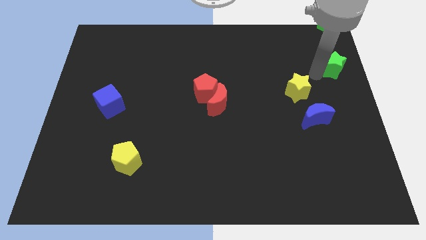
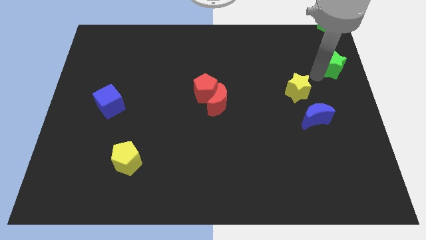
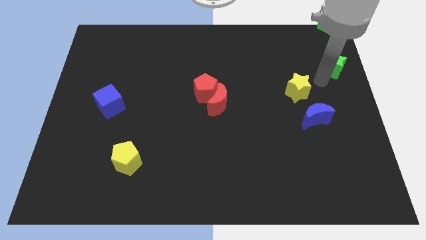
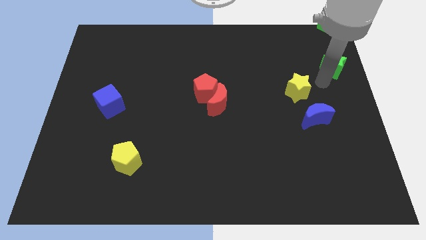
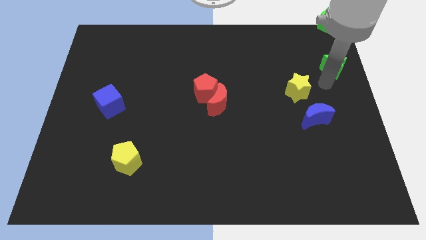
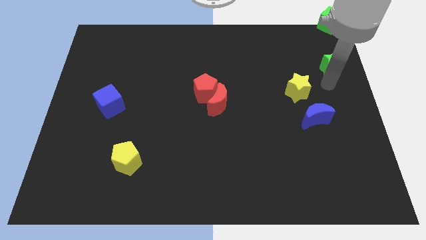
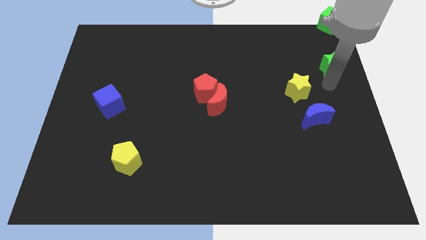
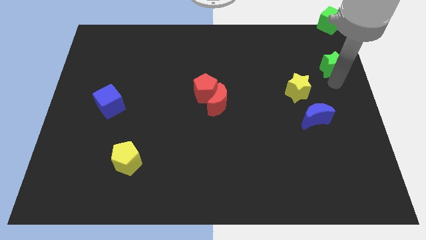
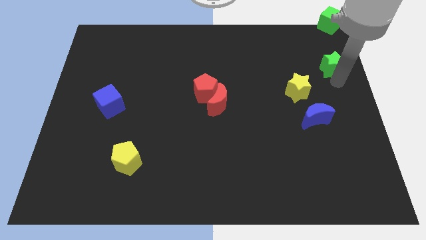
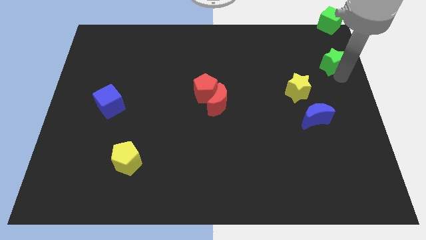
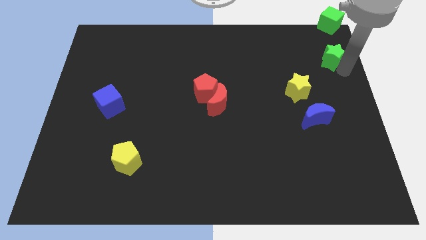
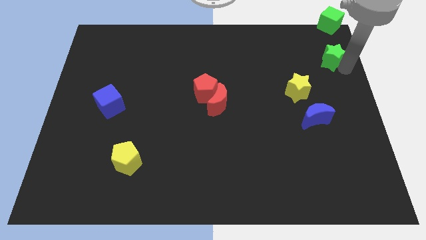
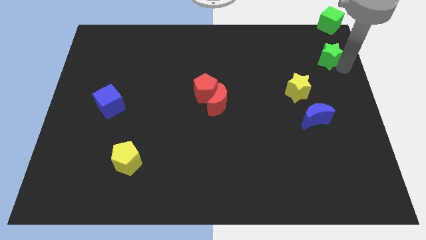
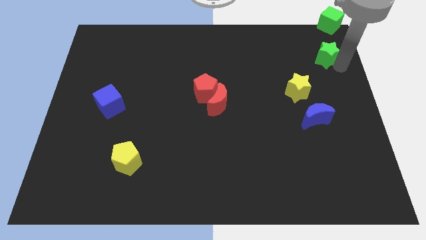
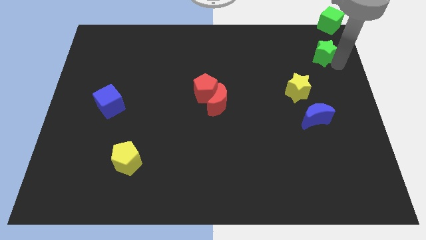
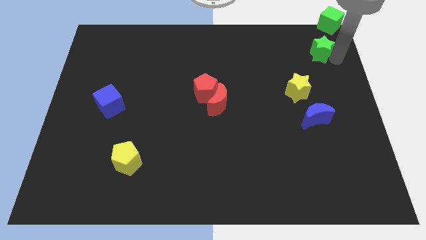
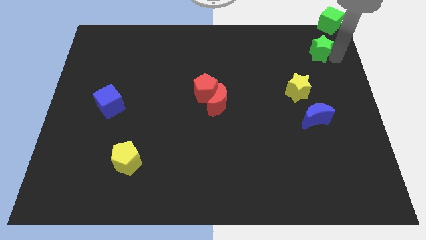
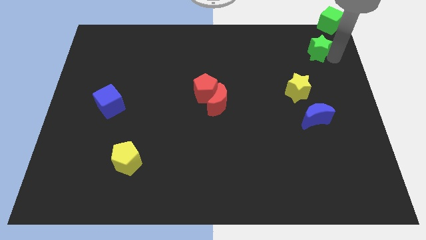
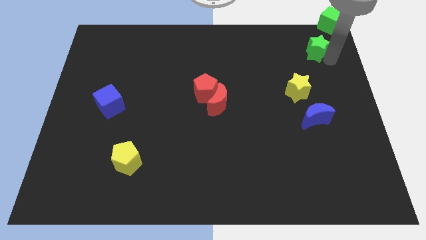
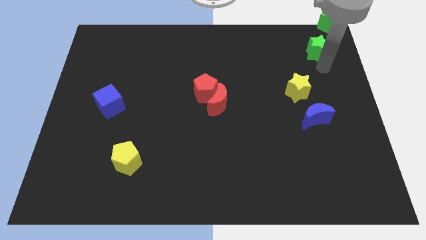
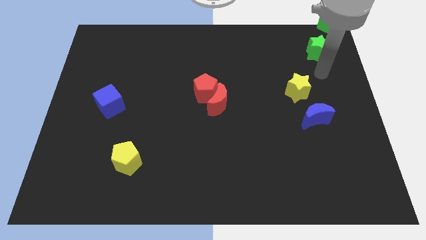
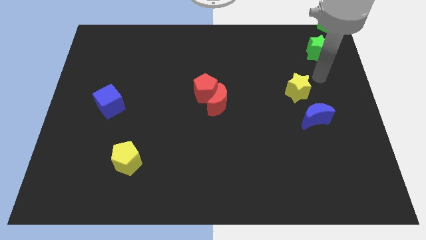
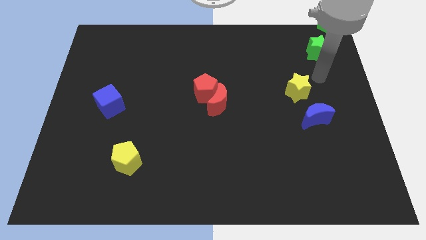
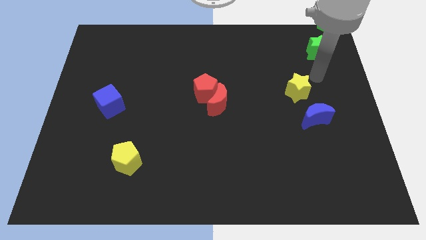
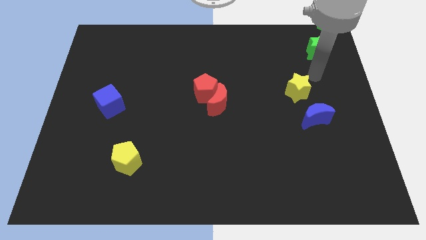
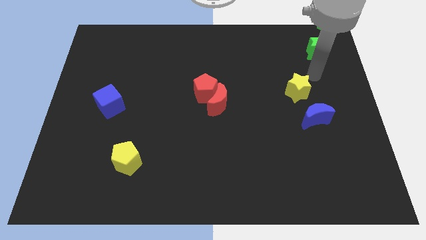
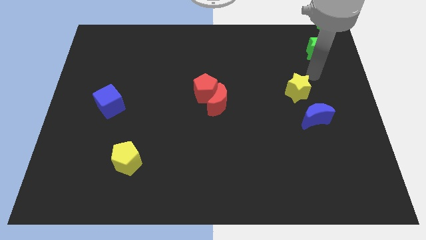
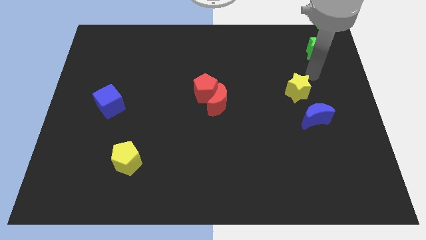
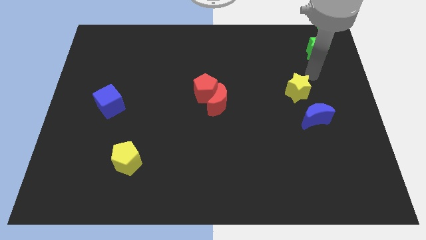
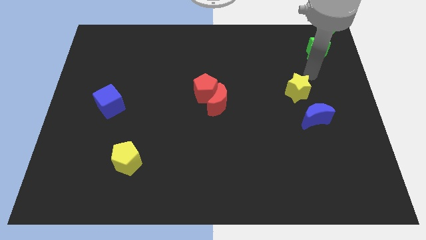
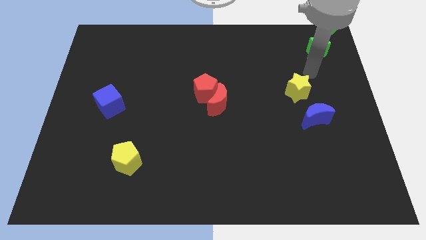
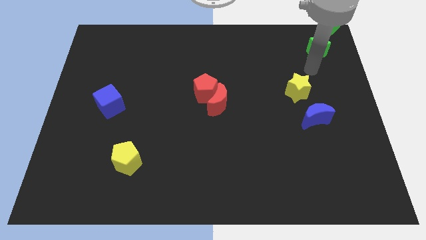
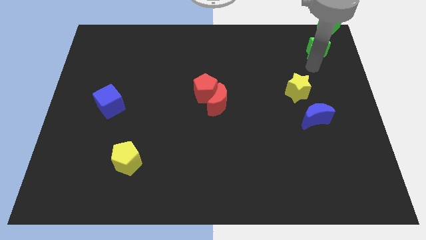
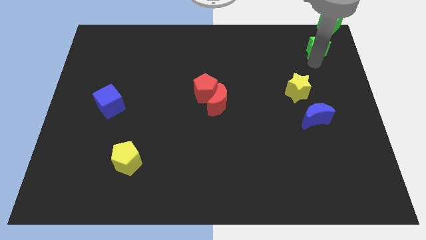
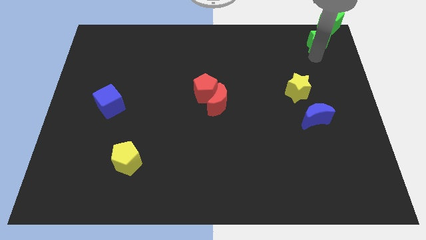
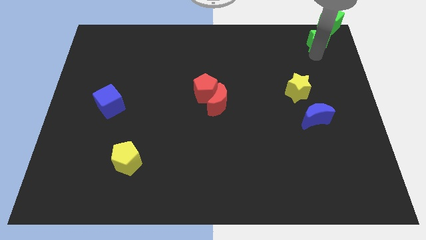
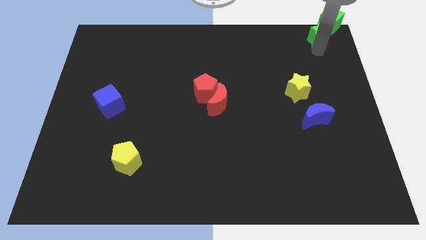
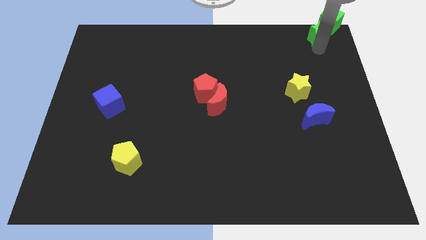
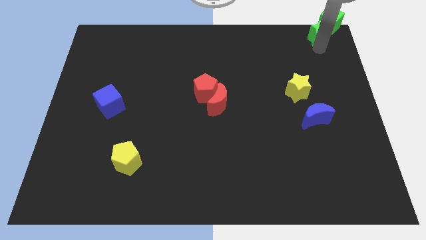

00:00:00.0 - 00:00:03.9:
move green star into the green sube

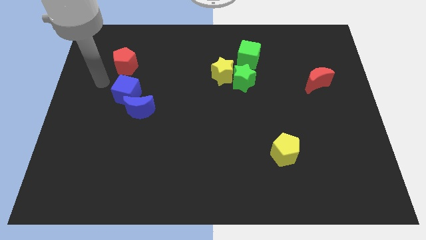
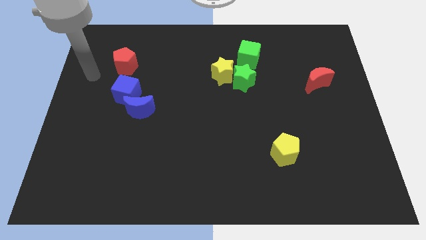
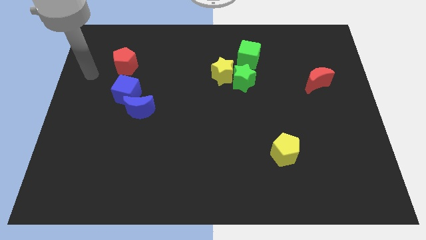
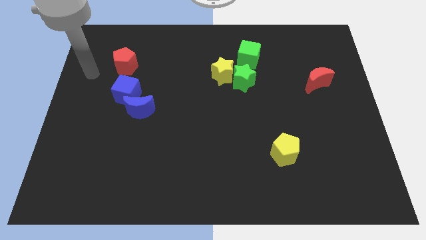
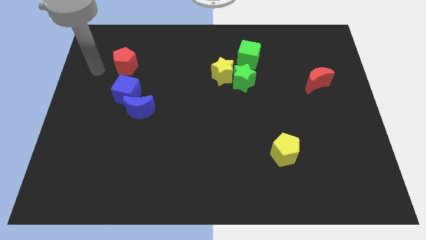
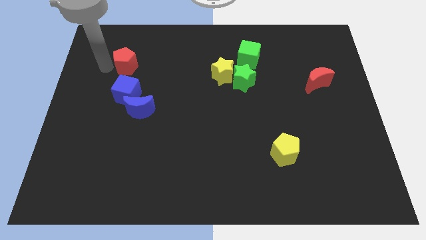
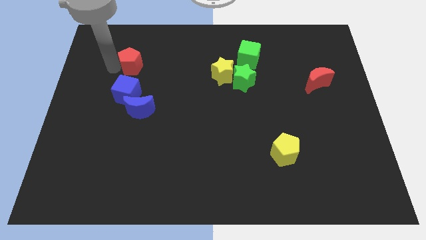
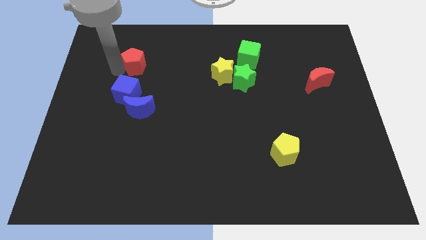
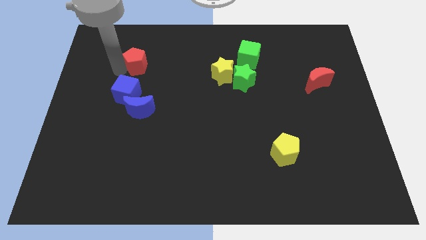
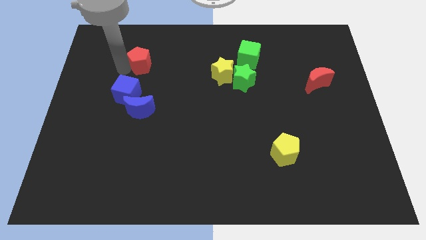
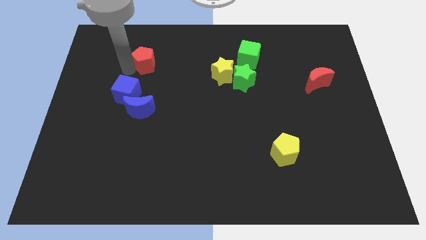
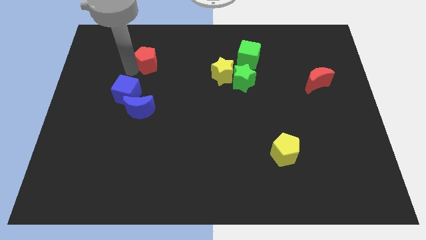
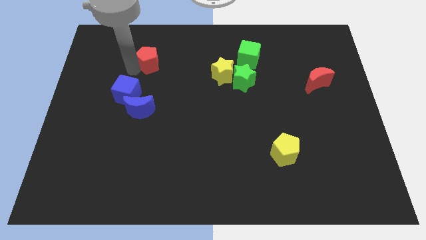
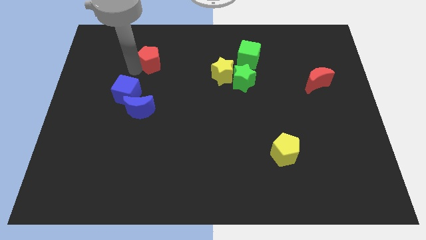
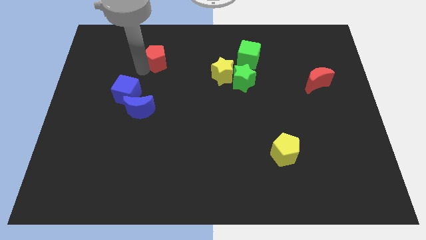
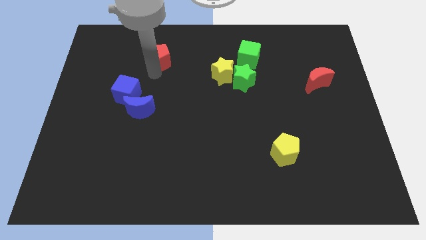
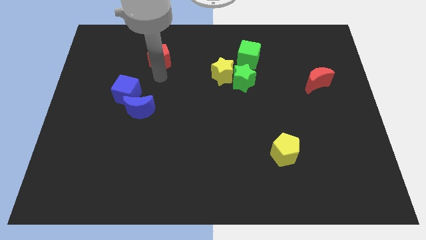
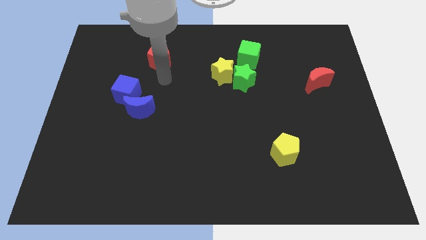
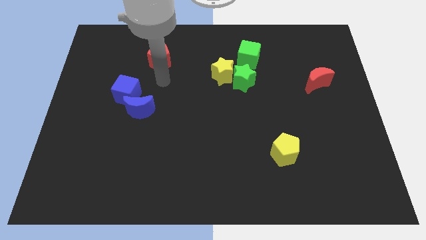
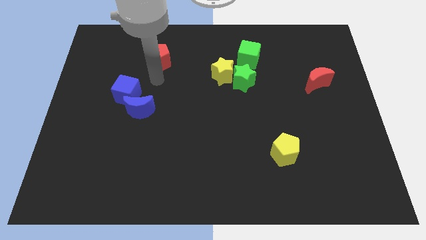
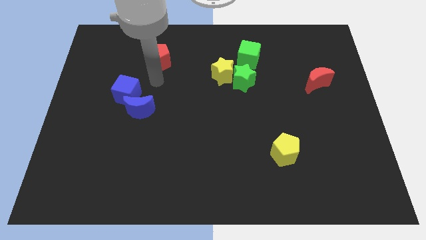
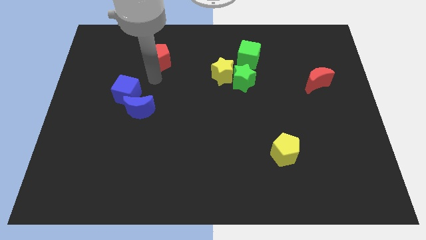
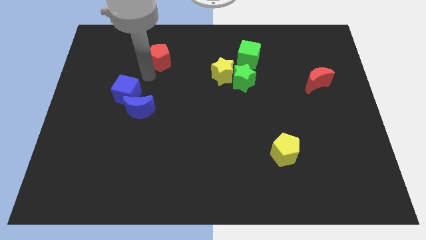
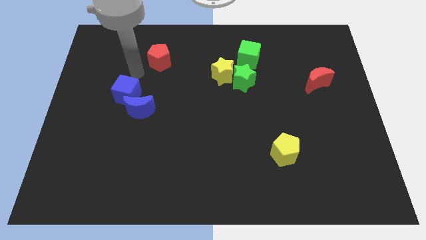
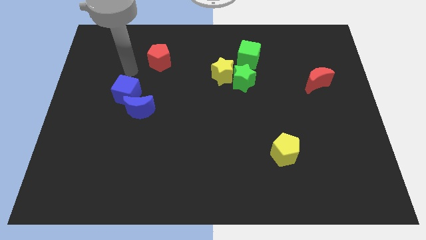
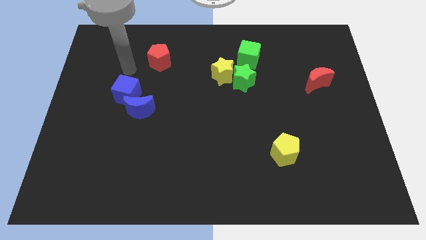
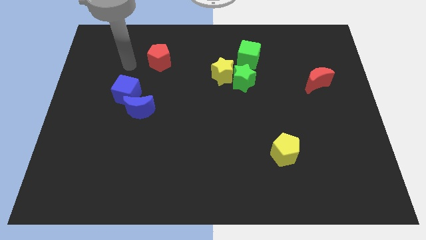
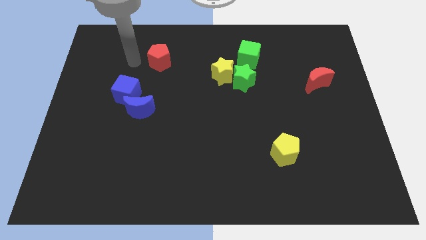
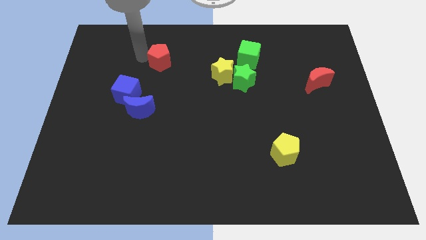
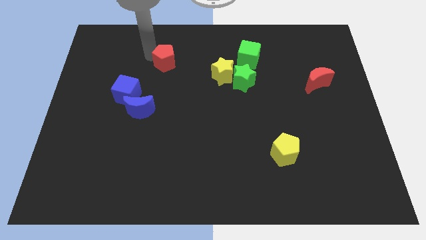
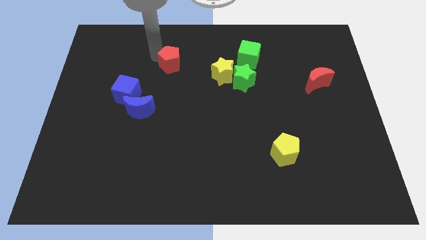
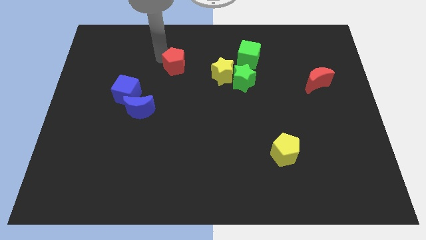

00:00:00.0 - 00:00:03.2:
separate red pentagon from blue cube

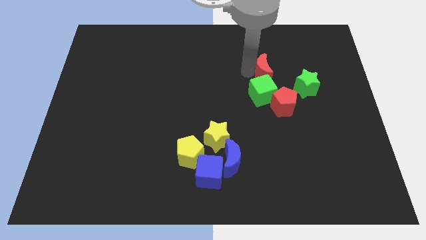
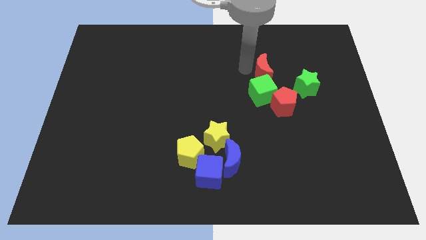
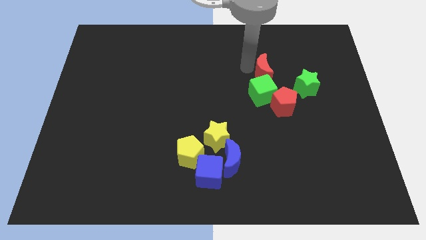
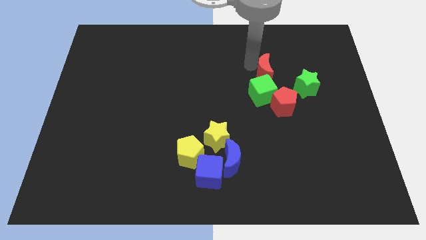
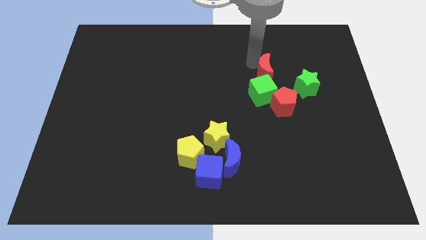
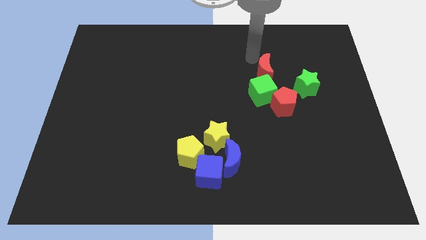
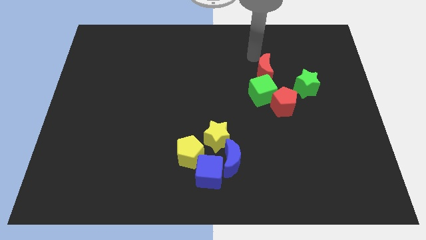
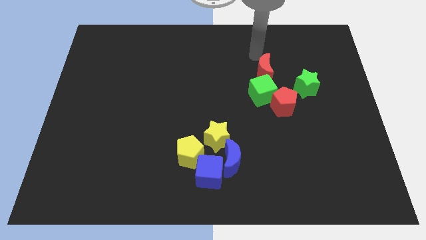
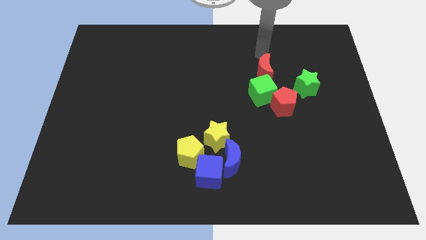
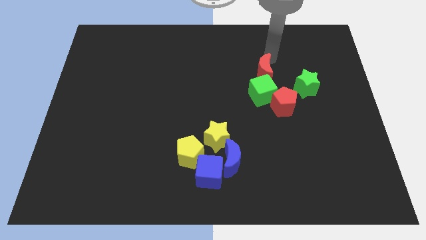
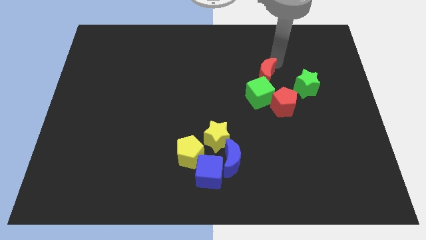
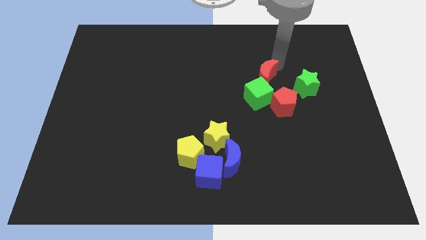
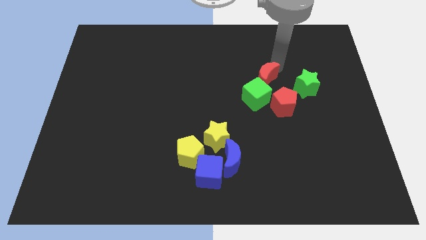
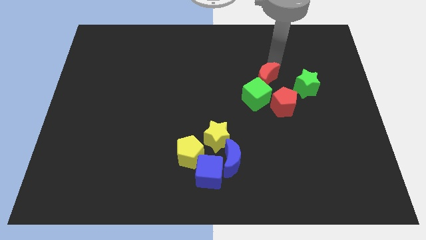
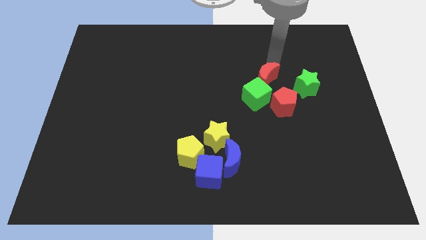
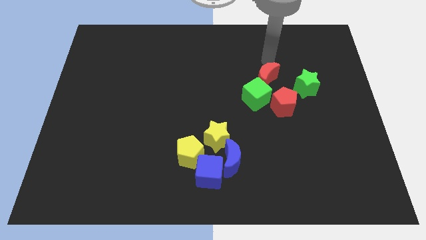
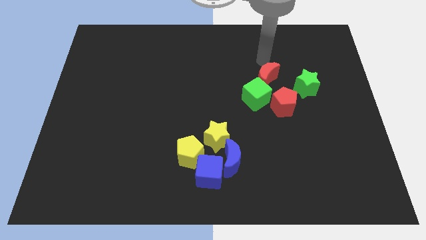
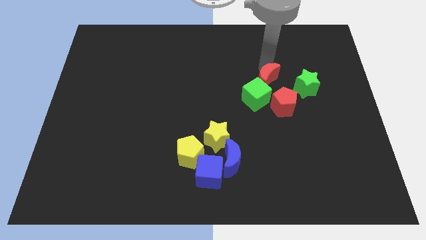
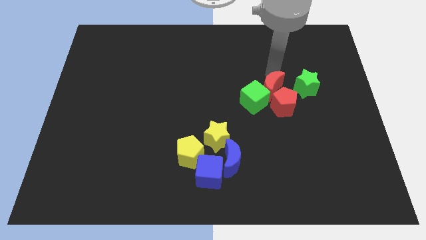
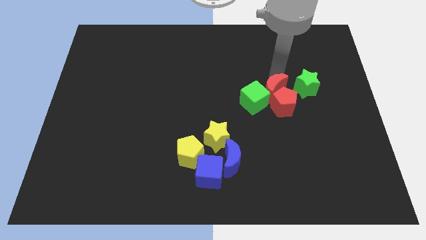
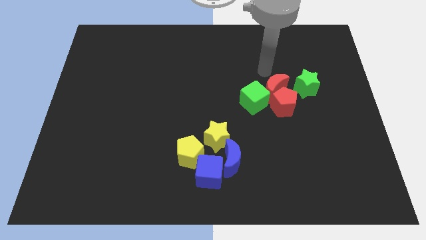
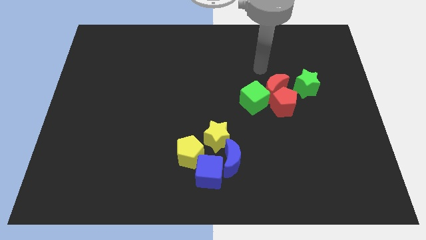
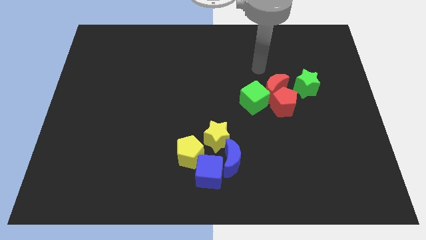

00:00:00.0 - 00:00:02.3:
place the red crescent on top of the red pentagon
